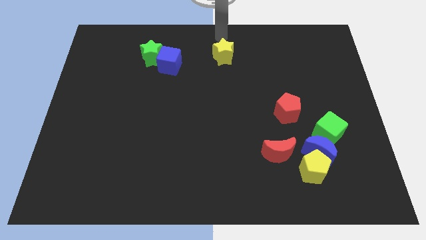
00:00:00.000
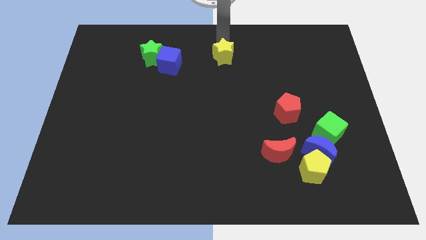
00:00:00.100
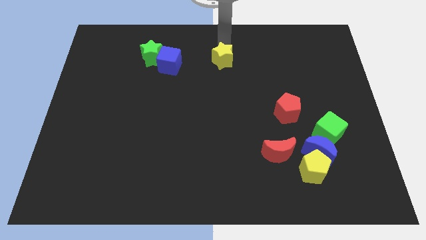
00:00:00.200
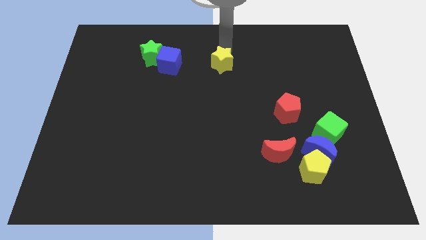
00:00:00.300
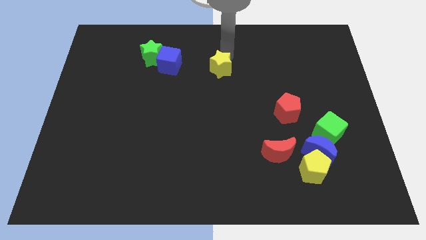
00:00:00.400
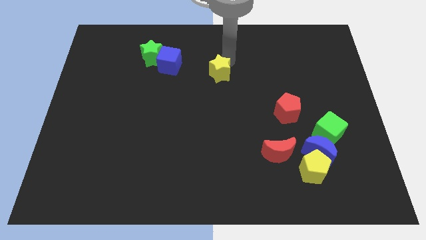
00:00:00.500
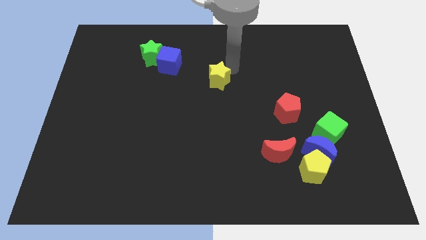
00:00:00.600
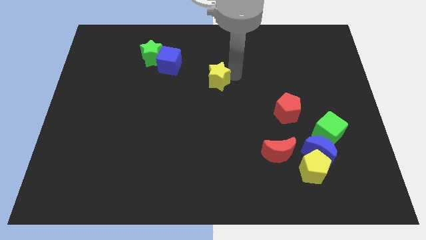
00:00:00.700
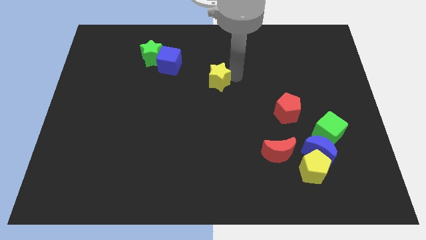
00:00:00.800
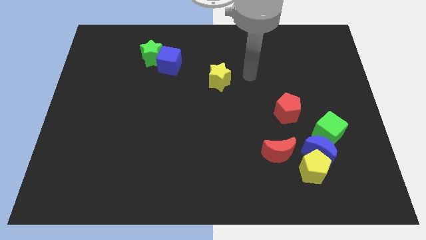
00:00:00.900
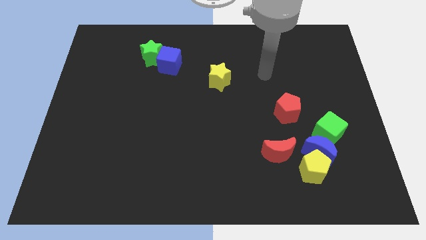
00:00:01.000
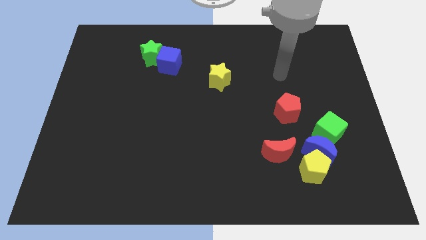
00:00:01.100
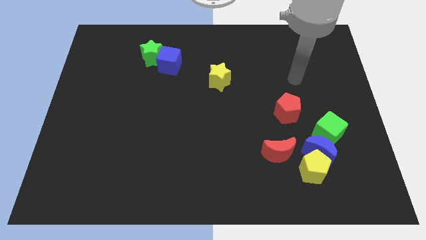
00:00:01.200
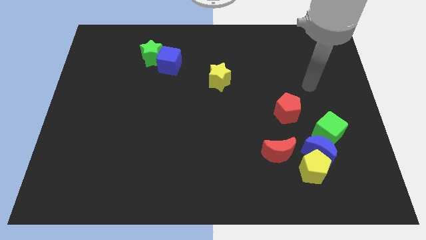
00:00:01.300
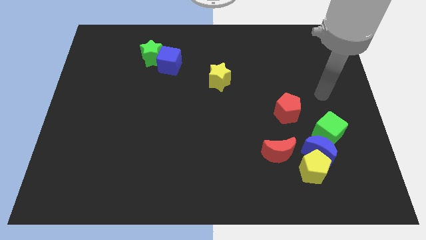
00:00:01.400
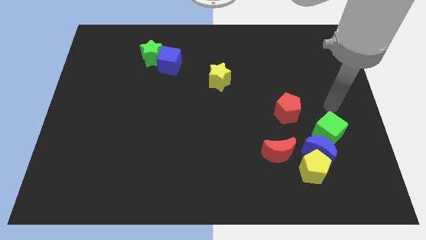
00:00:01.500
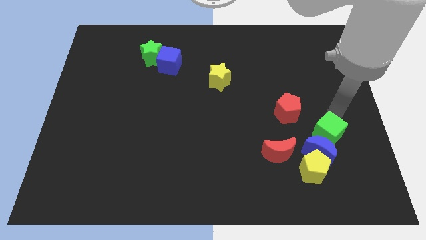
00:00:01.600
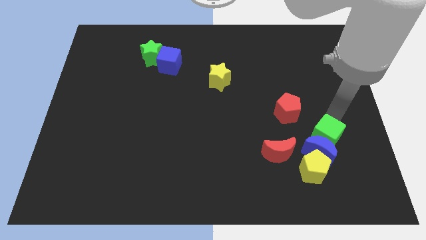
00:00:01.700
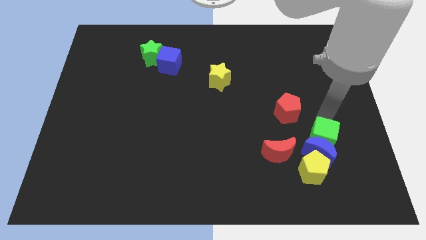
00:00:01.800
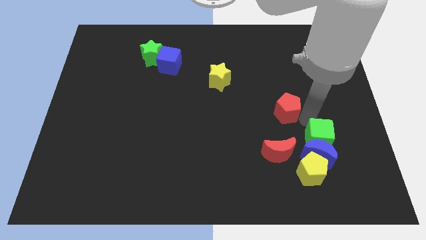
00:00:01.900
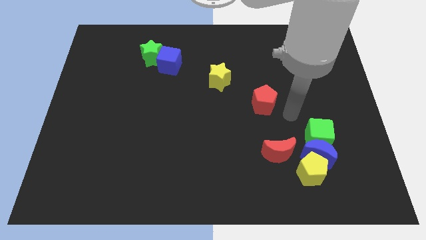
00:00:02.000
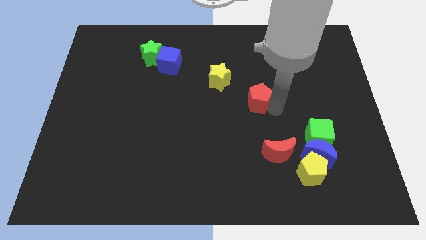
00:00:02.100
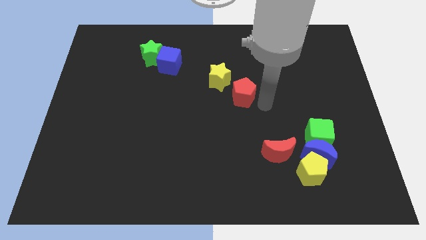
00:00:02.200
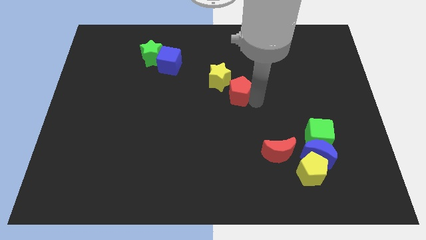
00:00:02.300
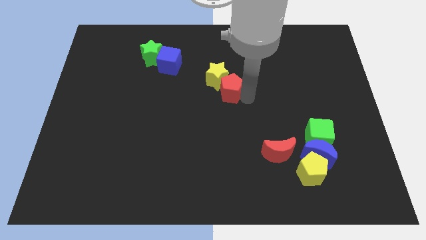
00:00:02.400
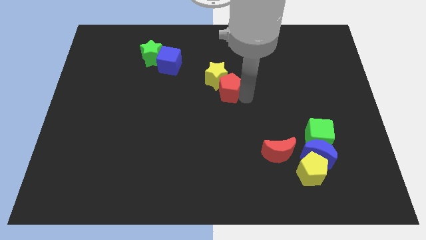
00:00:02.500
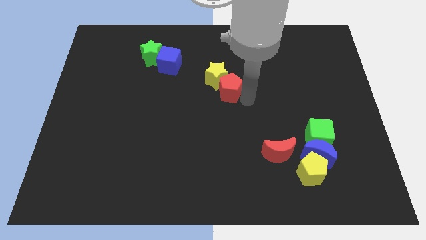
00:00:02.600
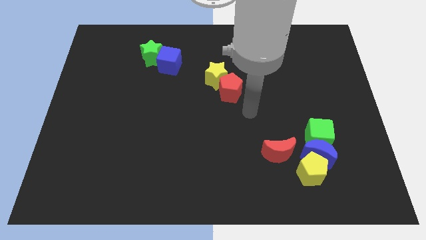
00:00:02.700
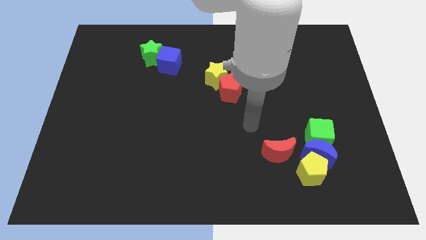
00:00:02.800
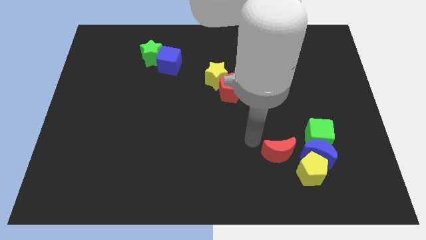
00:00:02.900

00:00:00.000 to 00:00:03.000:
push the yellow star and red pentagon to the center

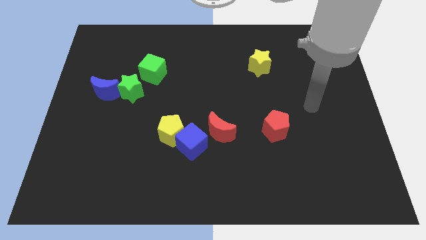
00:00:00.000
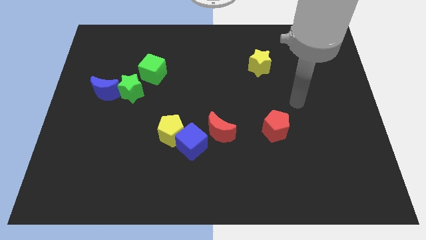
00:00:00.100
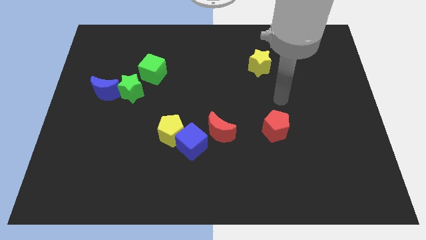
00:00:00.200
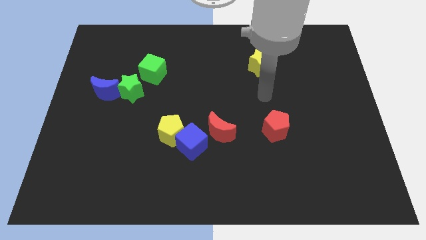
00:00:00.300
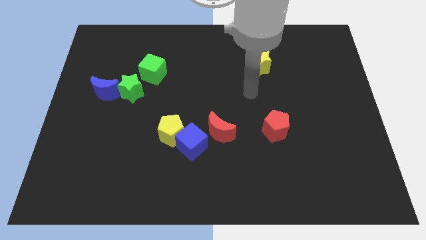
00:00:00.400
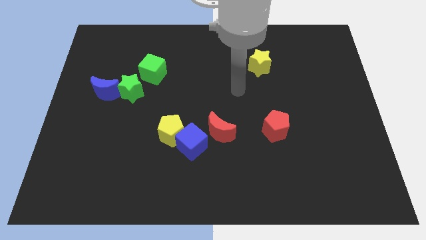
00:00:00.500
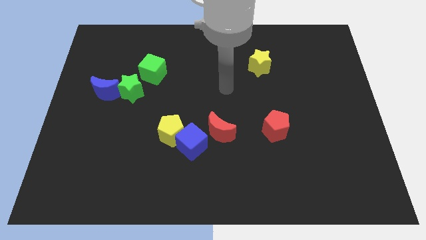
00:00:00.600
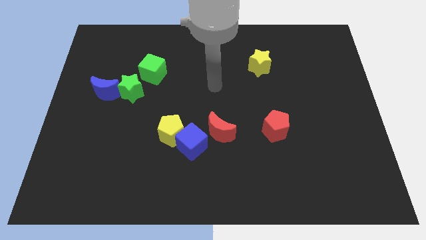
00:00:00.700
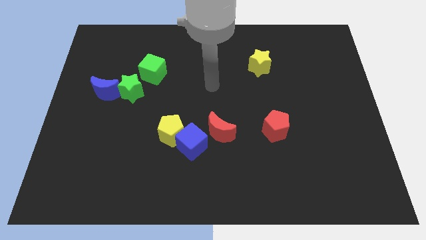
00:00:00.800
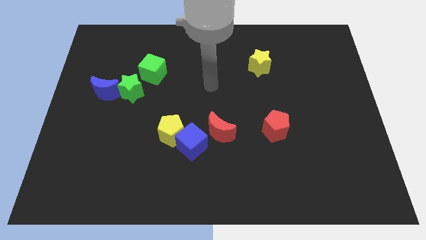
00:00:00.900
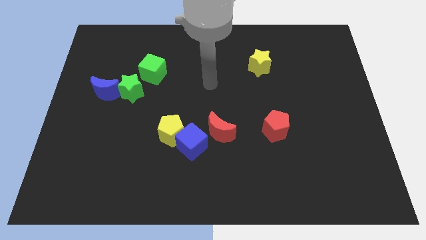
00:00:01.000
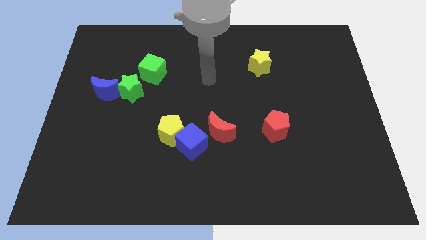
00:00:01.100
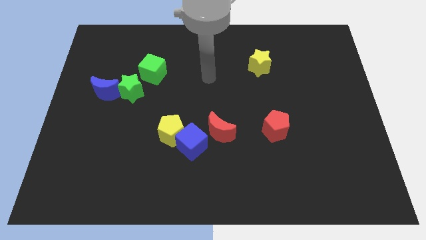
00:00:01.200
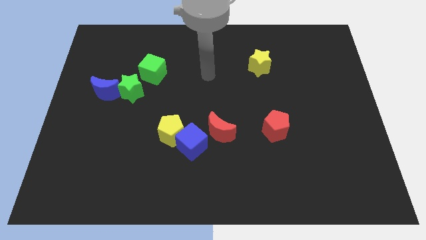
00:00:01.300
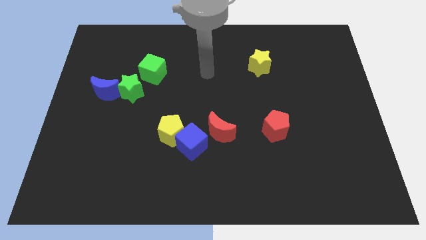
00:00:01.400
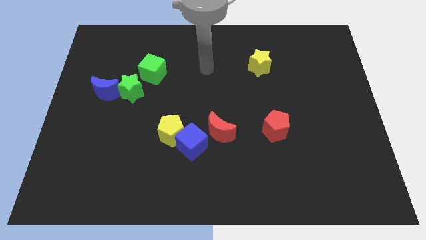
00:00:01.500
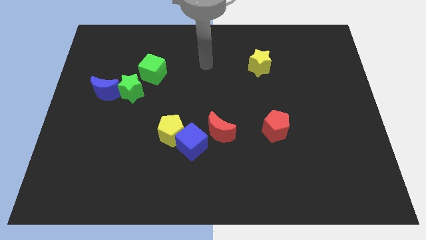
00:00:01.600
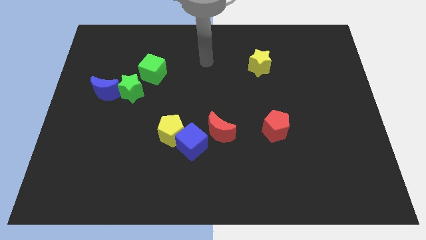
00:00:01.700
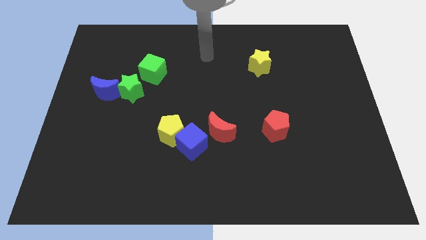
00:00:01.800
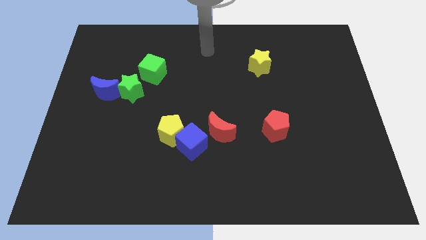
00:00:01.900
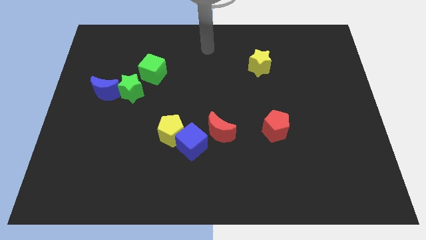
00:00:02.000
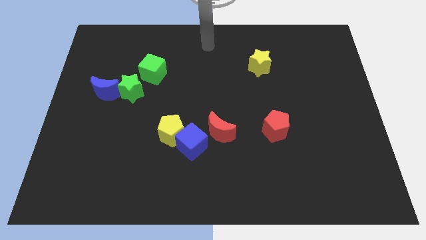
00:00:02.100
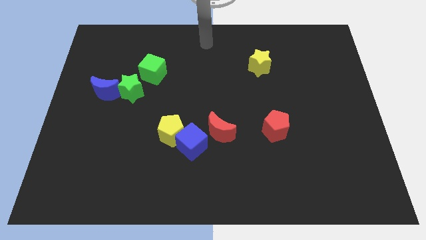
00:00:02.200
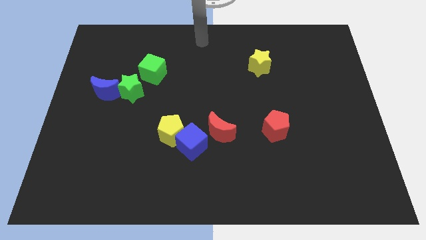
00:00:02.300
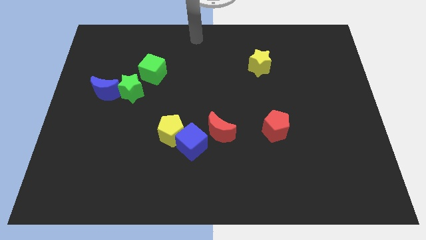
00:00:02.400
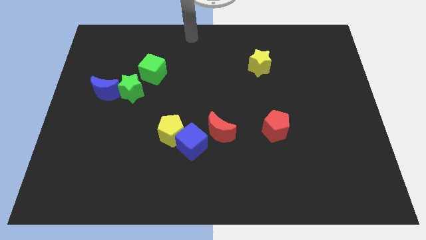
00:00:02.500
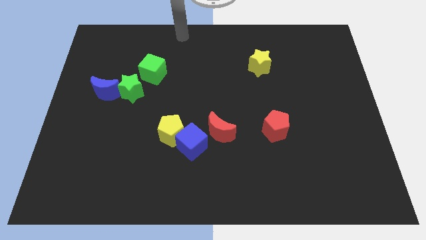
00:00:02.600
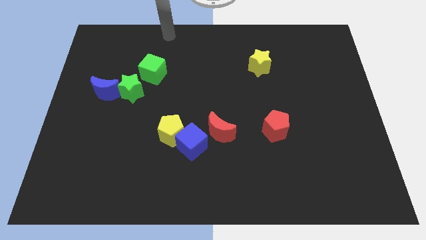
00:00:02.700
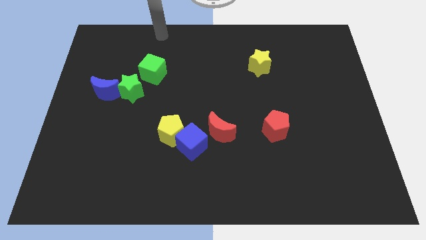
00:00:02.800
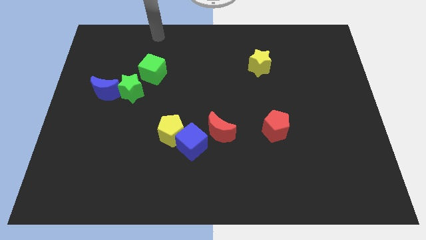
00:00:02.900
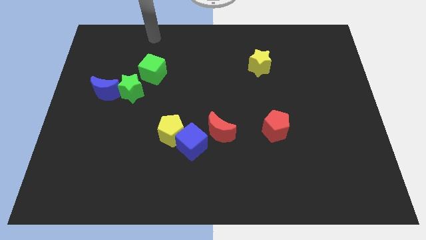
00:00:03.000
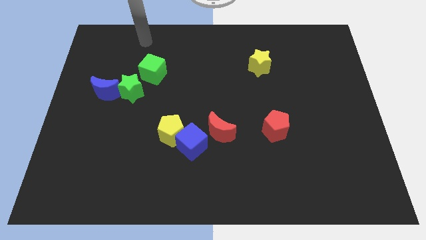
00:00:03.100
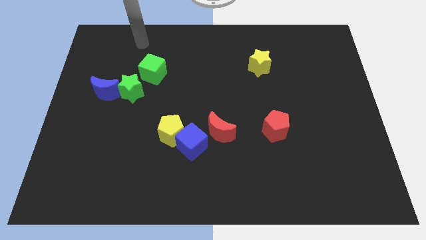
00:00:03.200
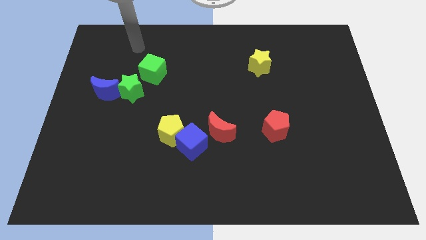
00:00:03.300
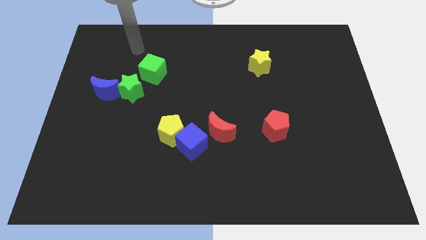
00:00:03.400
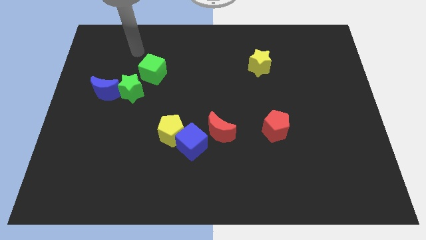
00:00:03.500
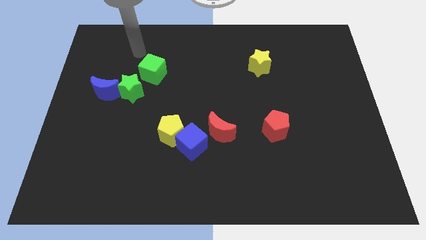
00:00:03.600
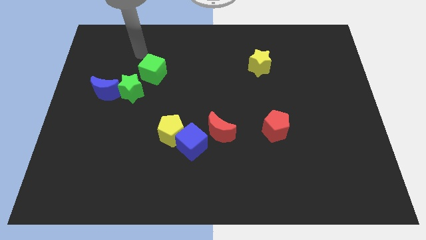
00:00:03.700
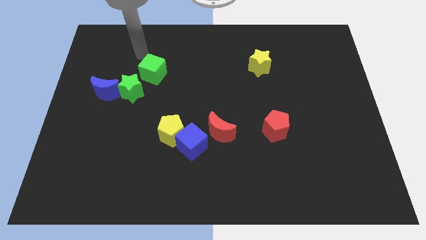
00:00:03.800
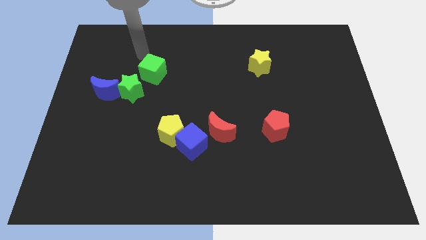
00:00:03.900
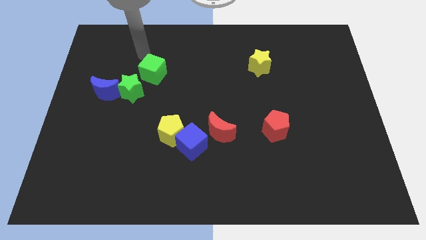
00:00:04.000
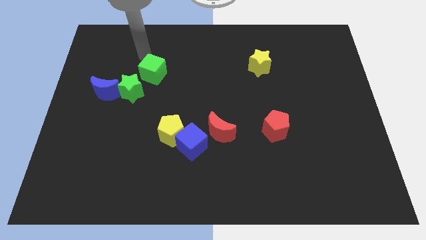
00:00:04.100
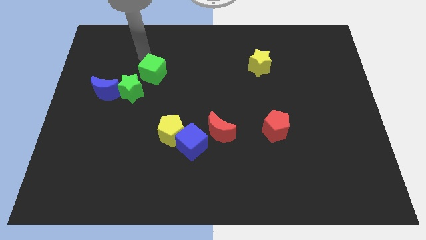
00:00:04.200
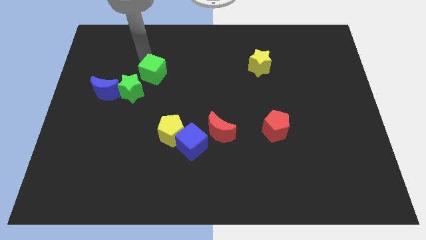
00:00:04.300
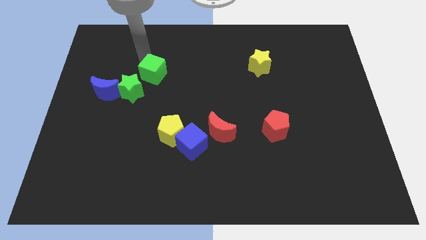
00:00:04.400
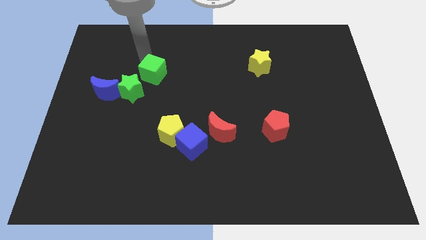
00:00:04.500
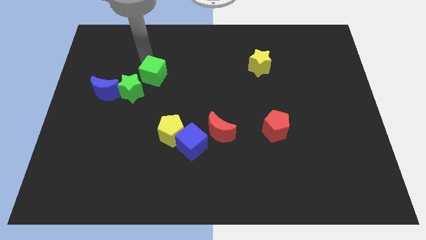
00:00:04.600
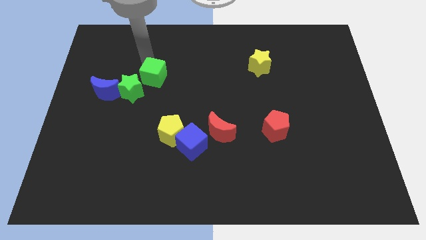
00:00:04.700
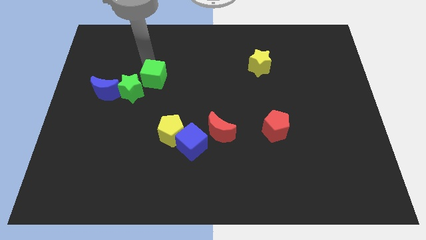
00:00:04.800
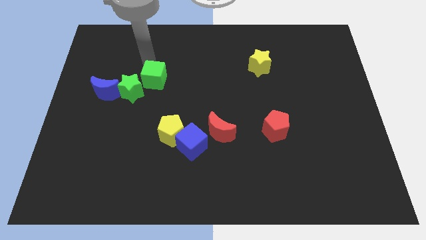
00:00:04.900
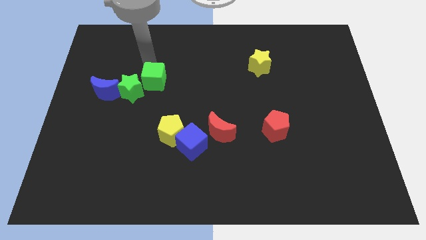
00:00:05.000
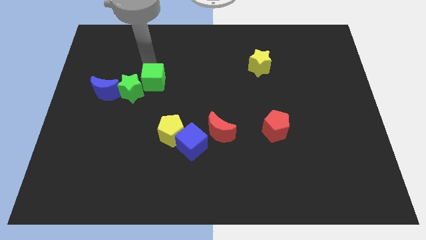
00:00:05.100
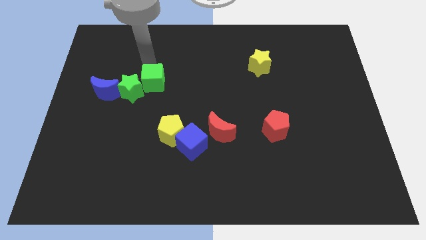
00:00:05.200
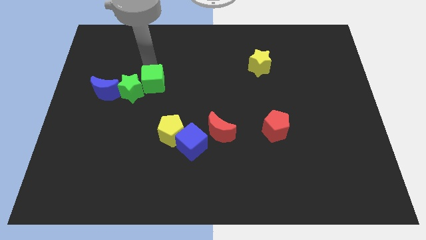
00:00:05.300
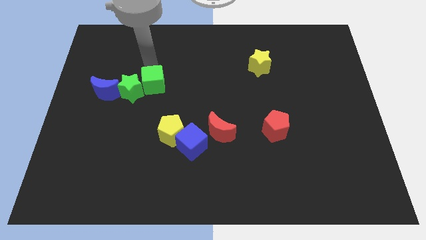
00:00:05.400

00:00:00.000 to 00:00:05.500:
push green cube right to green star

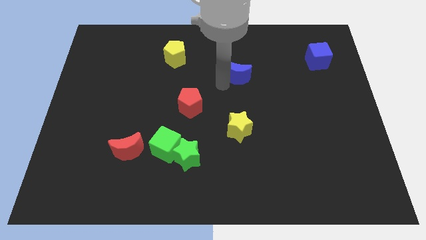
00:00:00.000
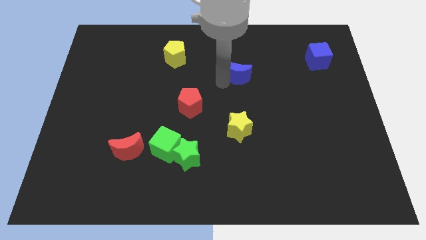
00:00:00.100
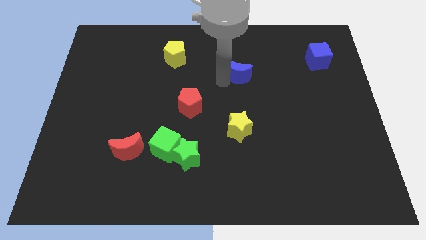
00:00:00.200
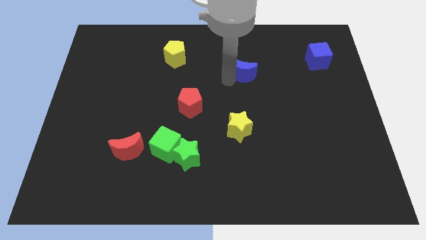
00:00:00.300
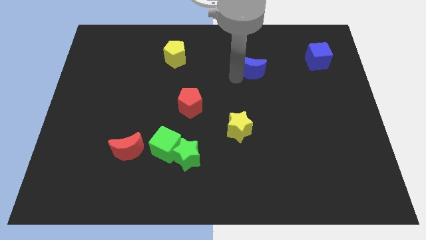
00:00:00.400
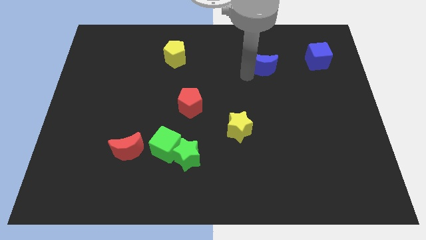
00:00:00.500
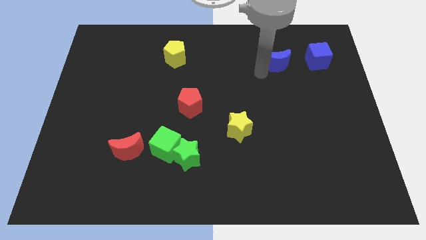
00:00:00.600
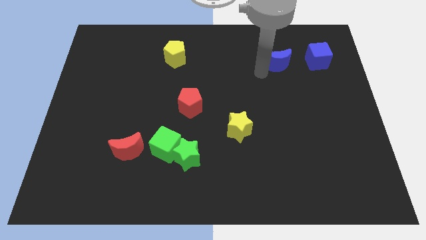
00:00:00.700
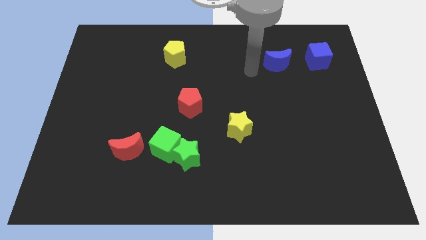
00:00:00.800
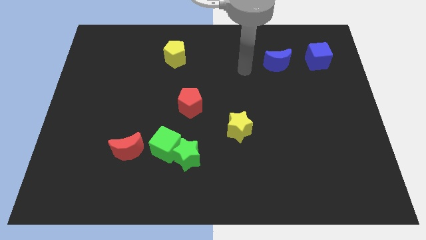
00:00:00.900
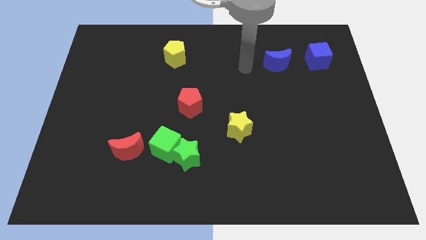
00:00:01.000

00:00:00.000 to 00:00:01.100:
push the blue crescent to the left of the blue cube
